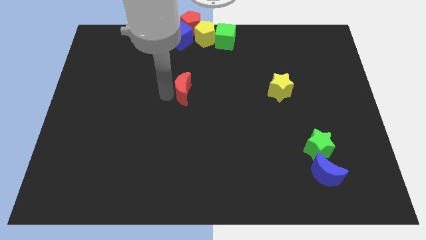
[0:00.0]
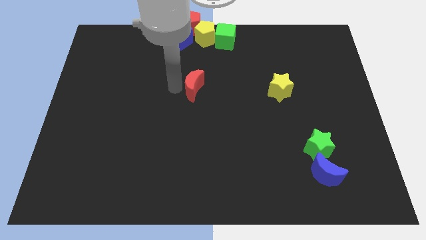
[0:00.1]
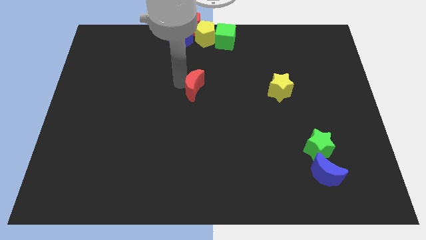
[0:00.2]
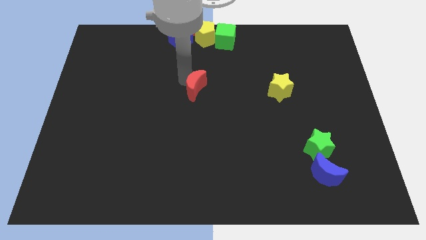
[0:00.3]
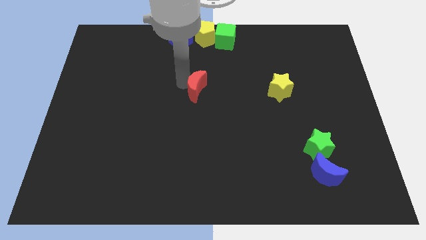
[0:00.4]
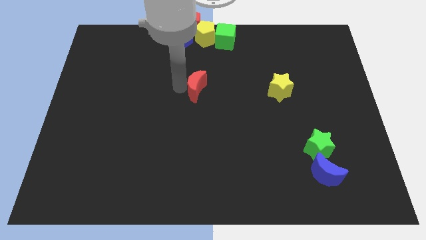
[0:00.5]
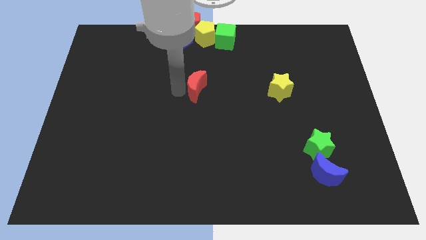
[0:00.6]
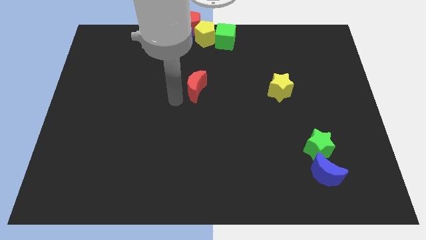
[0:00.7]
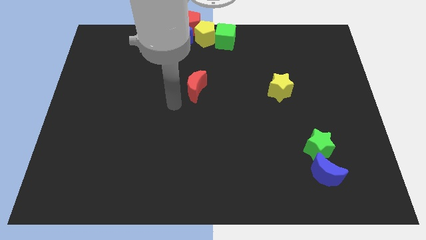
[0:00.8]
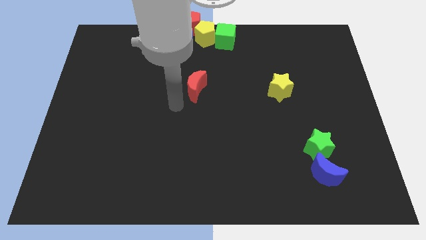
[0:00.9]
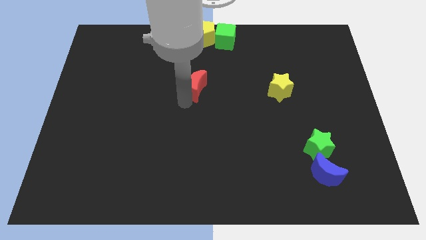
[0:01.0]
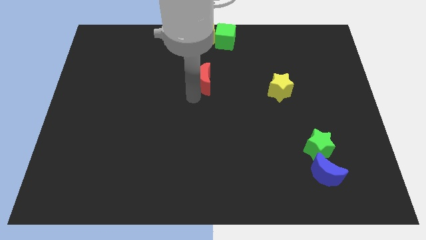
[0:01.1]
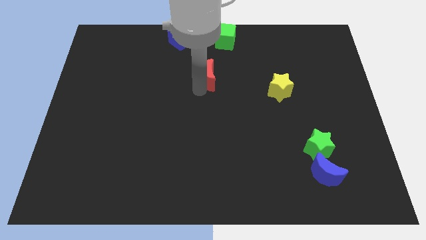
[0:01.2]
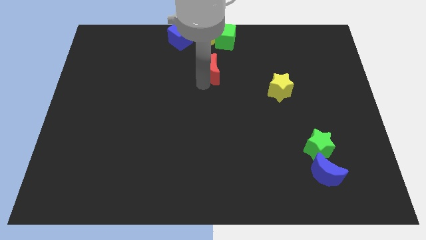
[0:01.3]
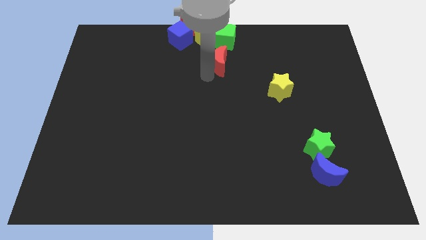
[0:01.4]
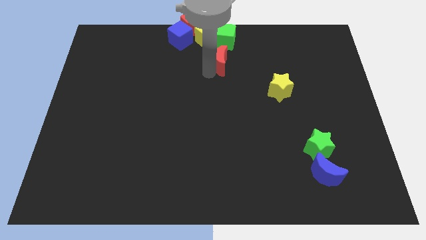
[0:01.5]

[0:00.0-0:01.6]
place the red moon below the green cube

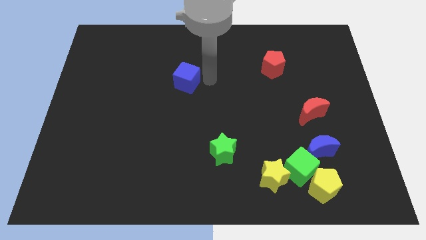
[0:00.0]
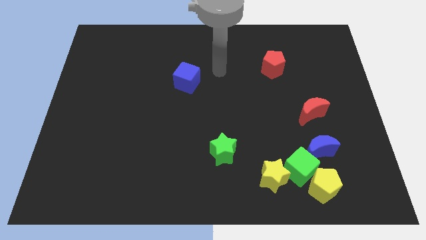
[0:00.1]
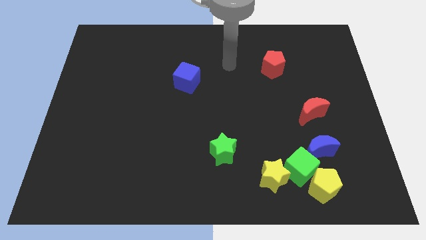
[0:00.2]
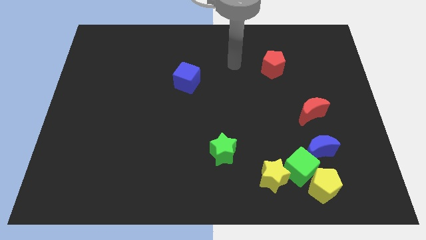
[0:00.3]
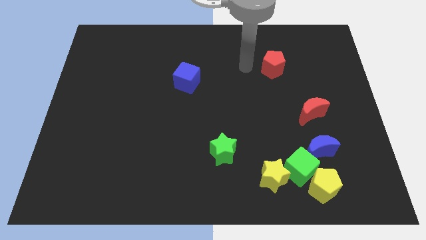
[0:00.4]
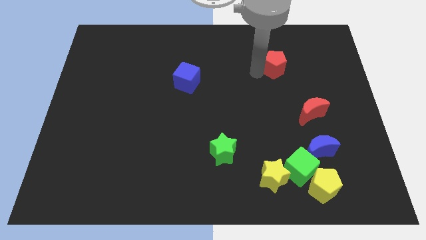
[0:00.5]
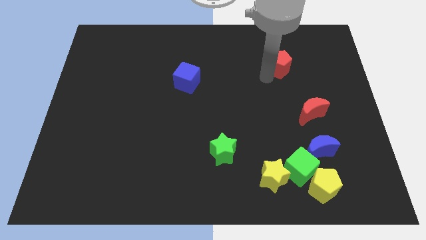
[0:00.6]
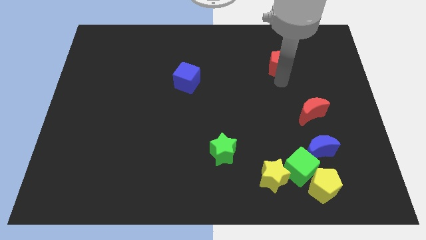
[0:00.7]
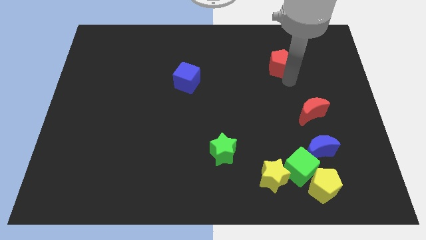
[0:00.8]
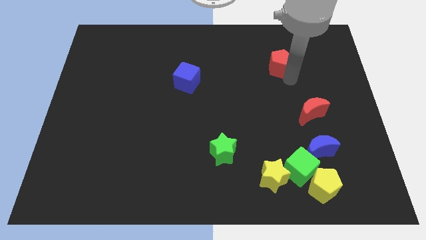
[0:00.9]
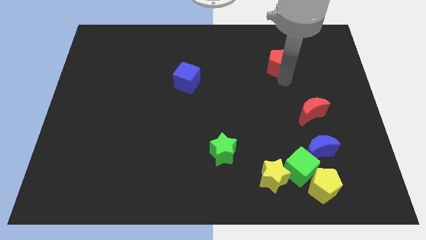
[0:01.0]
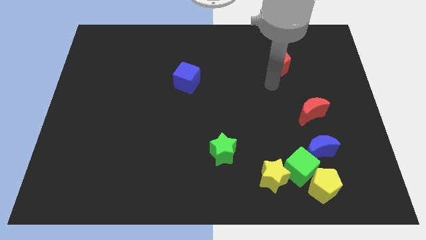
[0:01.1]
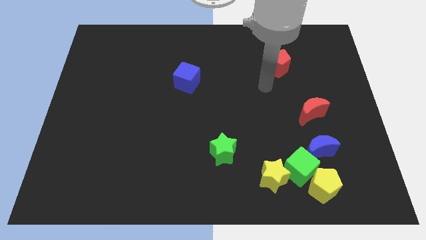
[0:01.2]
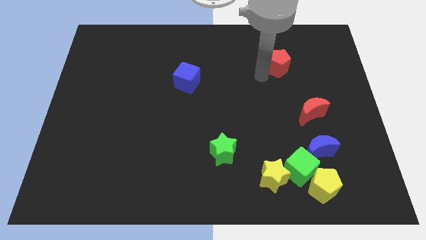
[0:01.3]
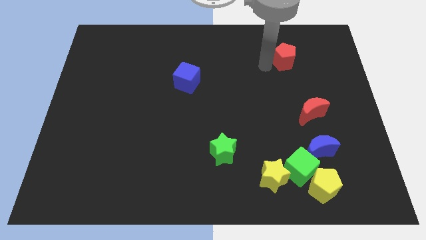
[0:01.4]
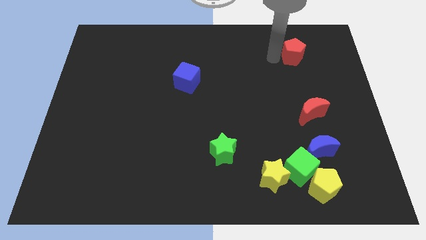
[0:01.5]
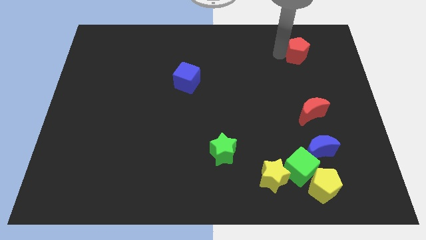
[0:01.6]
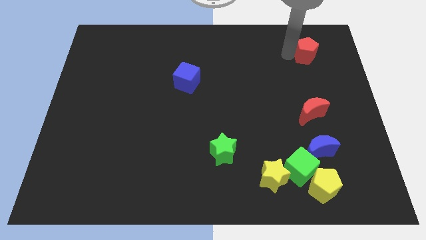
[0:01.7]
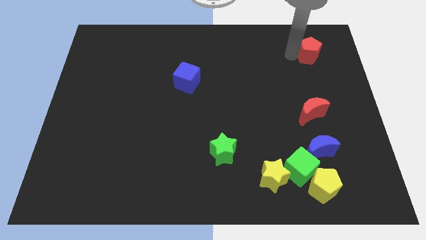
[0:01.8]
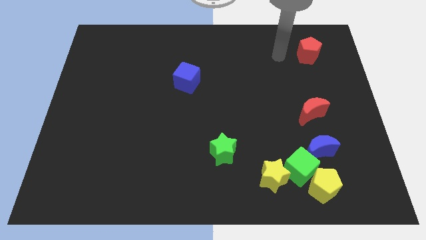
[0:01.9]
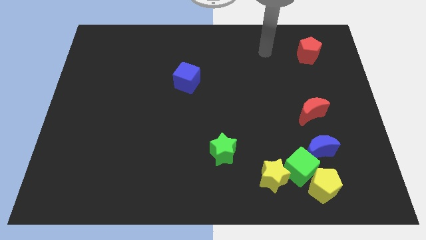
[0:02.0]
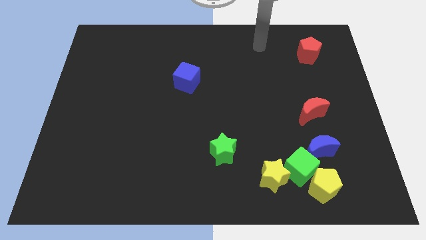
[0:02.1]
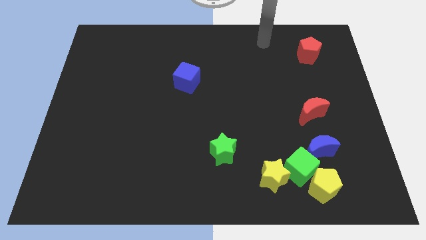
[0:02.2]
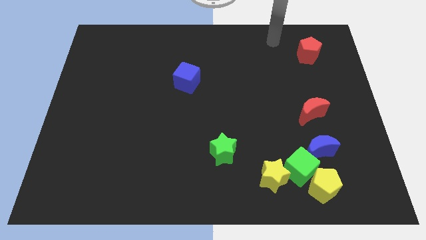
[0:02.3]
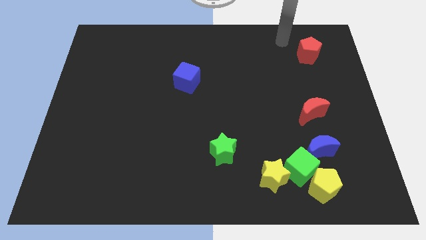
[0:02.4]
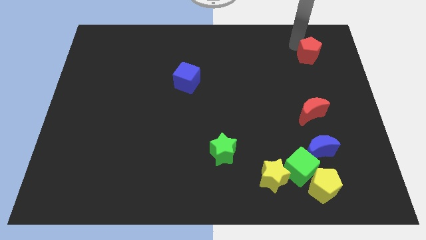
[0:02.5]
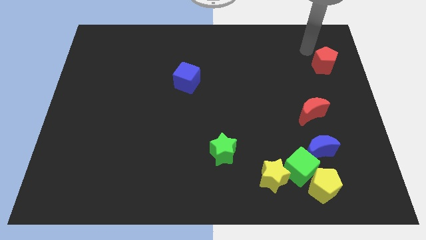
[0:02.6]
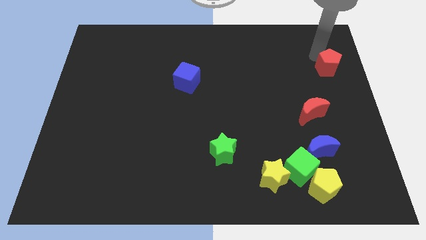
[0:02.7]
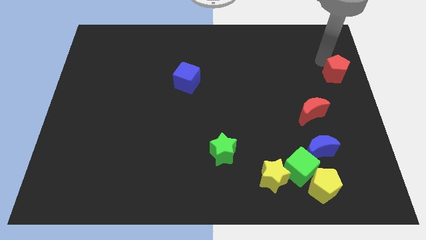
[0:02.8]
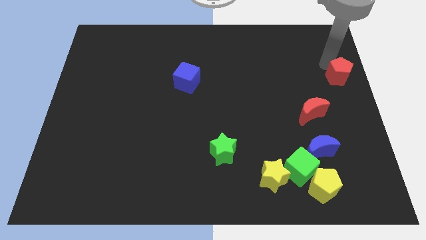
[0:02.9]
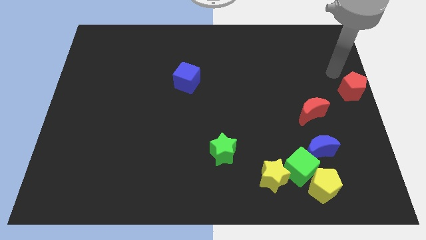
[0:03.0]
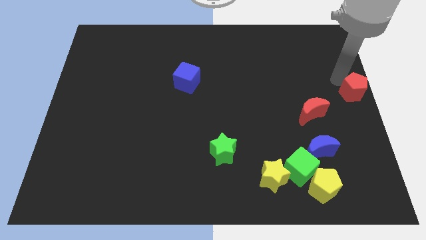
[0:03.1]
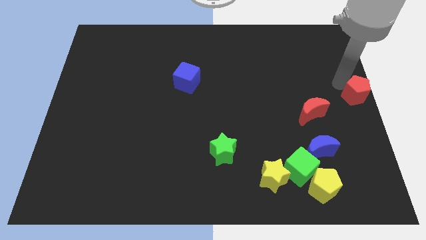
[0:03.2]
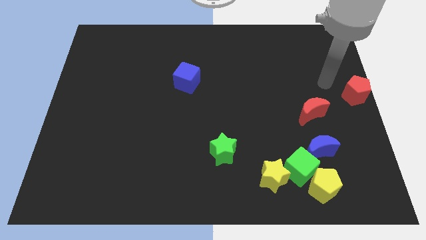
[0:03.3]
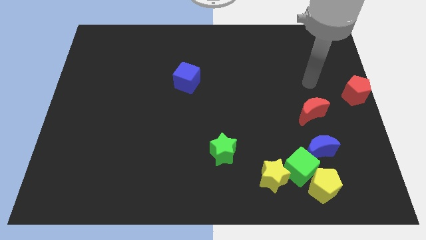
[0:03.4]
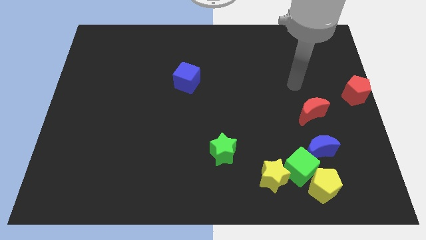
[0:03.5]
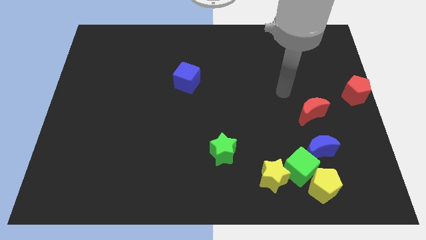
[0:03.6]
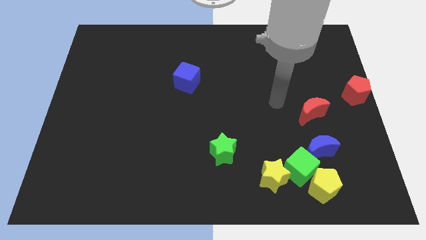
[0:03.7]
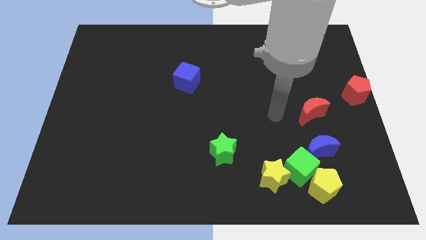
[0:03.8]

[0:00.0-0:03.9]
slide the red pentagon to the center right of the board

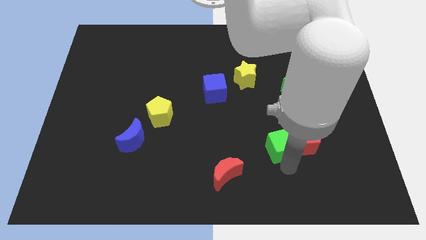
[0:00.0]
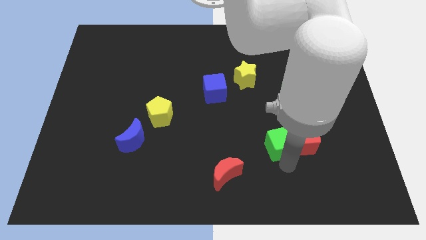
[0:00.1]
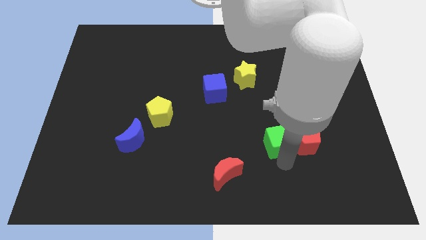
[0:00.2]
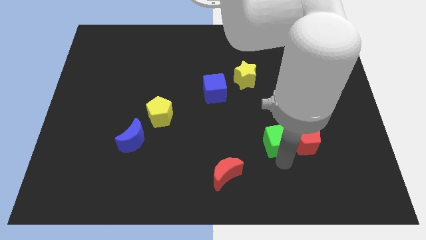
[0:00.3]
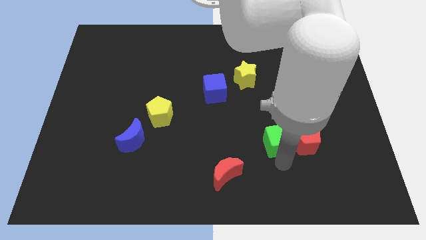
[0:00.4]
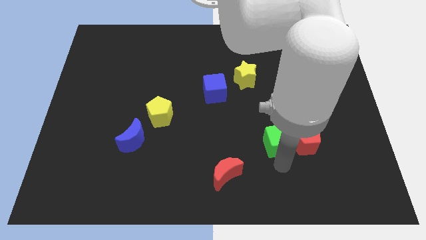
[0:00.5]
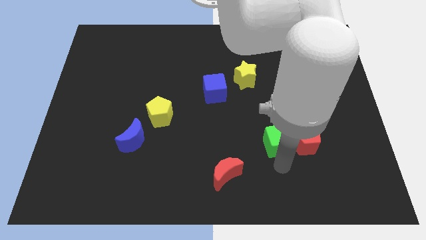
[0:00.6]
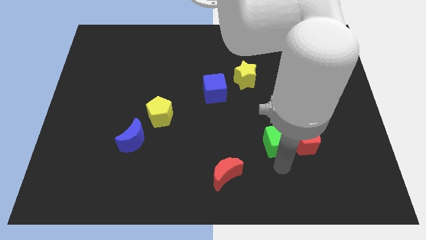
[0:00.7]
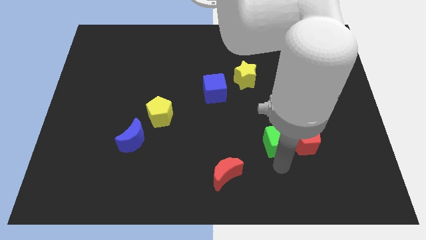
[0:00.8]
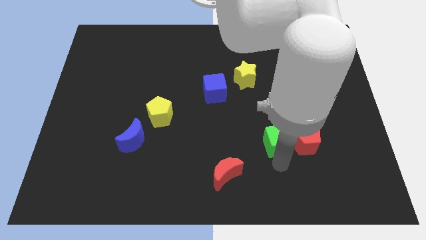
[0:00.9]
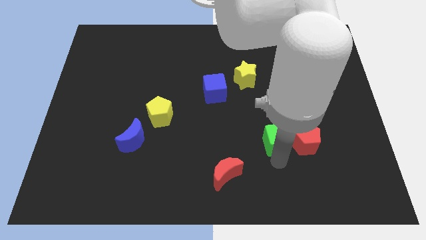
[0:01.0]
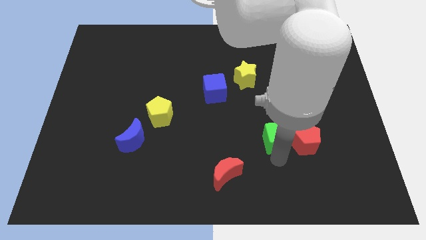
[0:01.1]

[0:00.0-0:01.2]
push green cube upwards

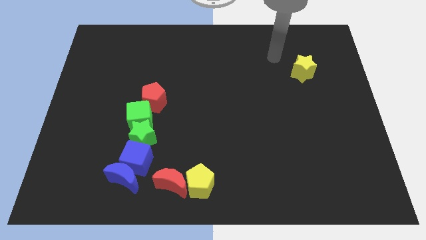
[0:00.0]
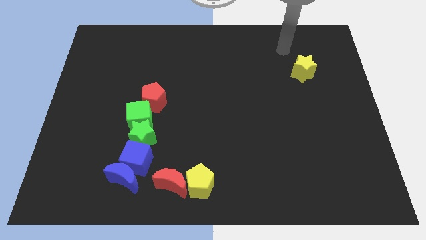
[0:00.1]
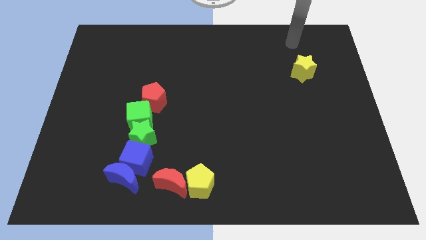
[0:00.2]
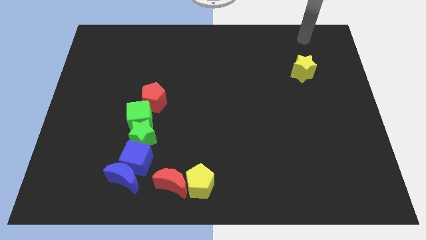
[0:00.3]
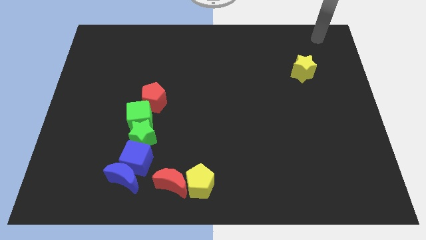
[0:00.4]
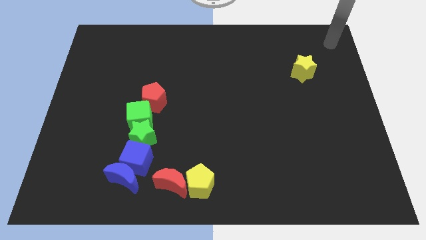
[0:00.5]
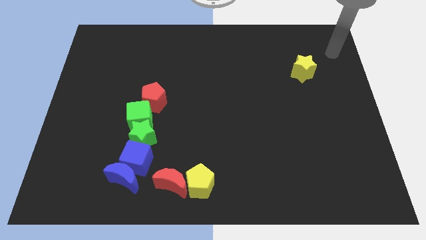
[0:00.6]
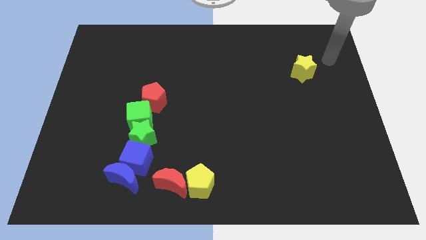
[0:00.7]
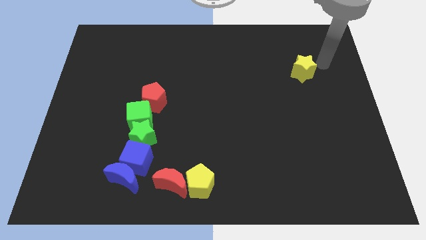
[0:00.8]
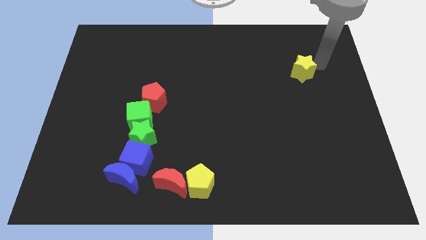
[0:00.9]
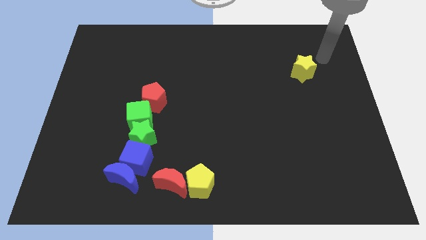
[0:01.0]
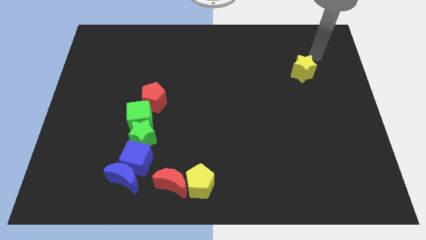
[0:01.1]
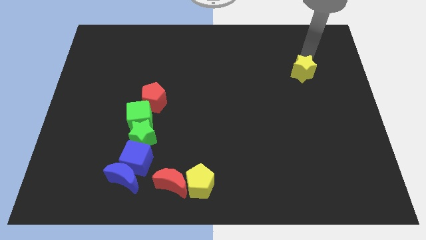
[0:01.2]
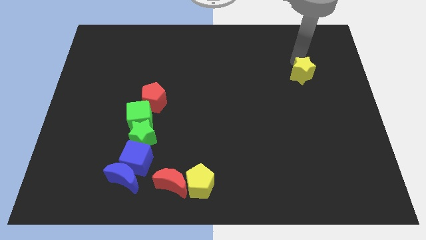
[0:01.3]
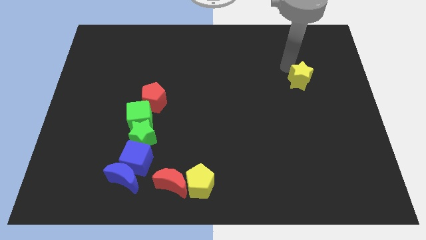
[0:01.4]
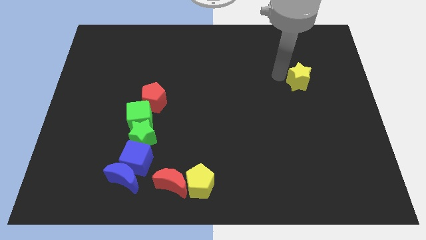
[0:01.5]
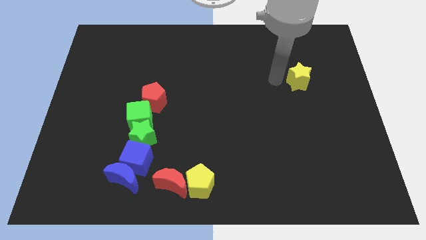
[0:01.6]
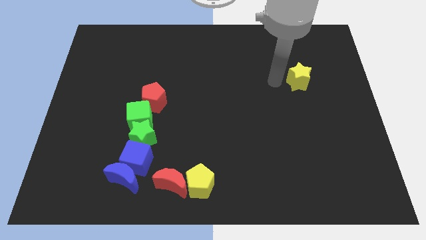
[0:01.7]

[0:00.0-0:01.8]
move the yellow star slightly to the bottom

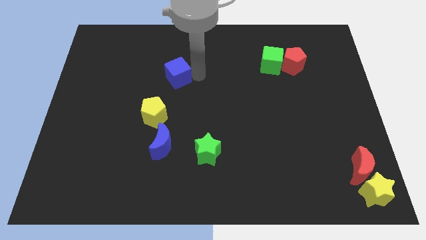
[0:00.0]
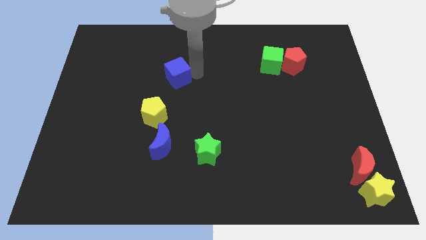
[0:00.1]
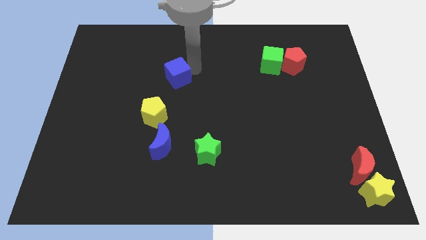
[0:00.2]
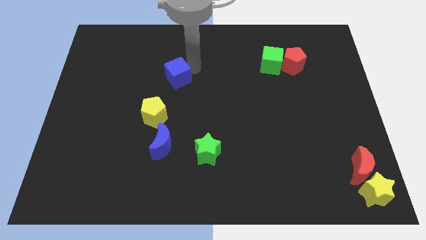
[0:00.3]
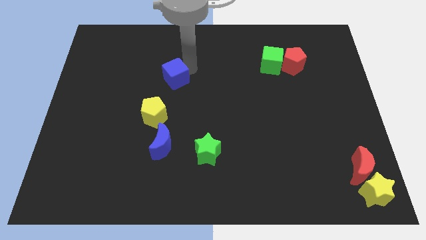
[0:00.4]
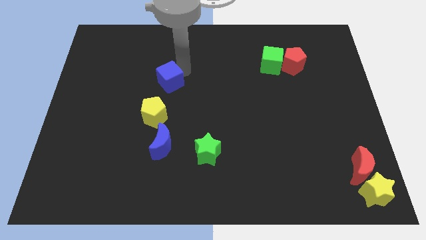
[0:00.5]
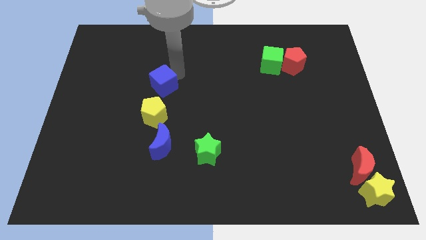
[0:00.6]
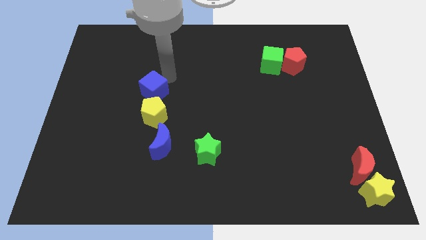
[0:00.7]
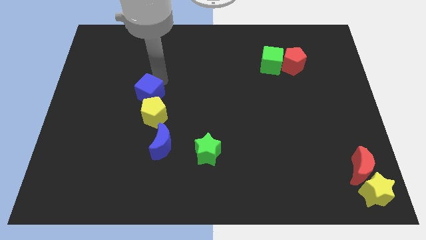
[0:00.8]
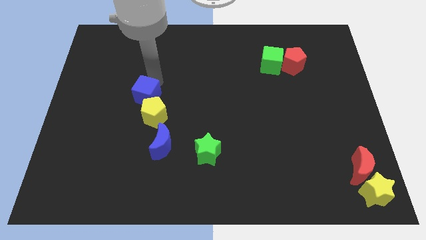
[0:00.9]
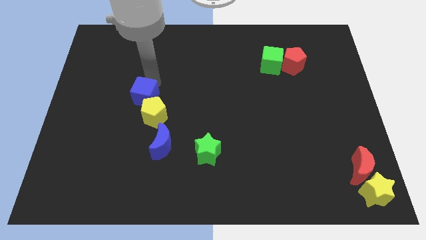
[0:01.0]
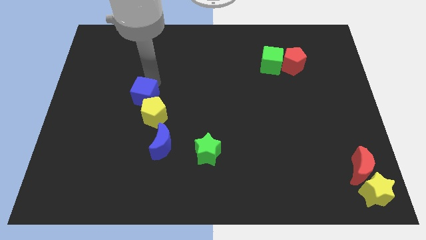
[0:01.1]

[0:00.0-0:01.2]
move the blue cube to the top of the yellow pentagon
